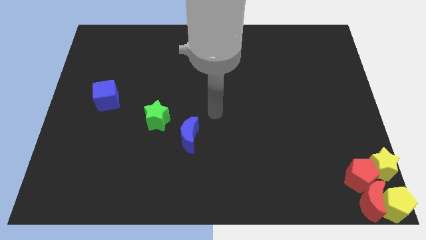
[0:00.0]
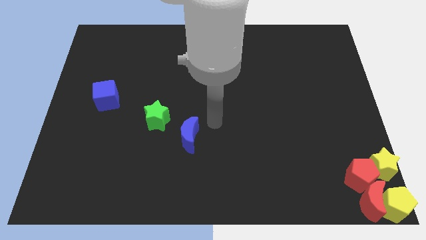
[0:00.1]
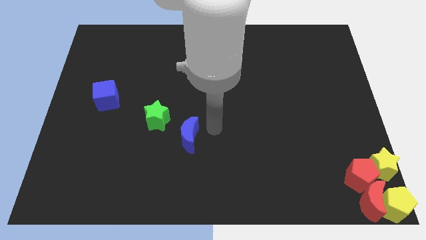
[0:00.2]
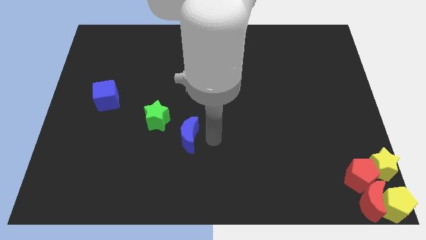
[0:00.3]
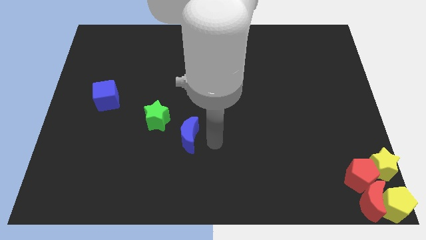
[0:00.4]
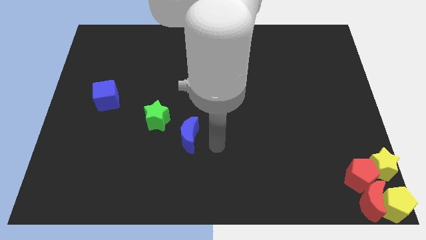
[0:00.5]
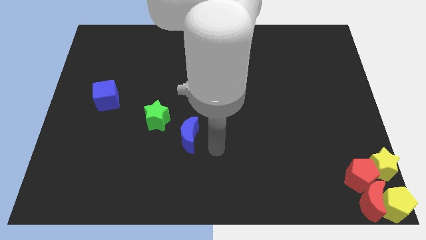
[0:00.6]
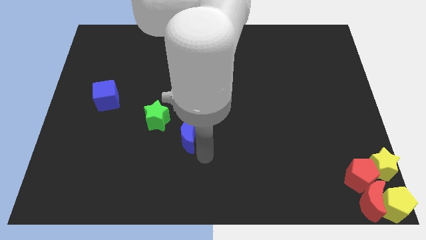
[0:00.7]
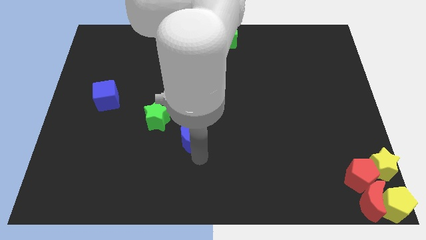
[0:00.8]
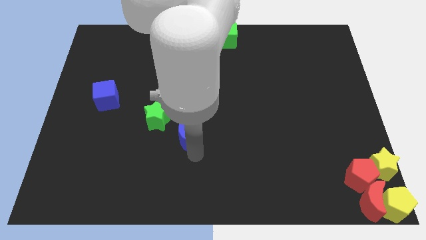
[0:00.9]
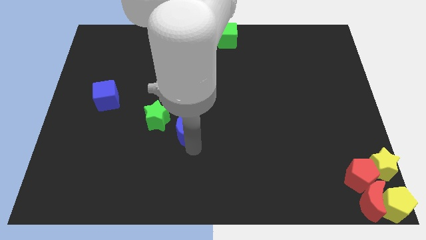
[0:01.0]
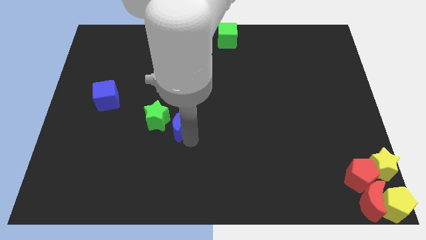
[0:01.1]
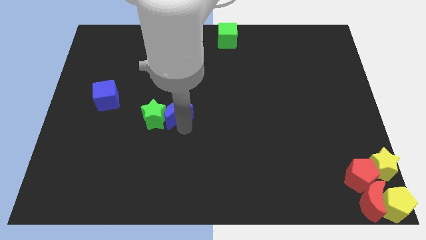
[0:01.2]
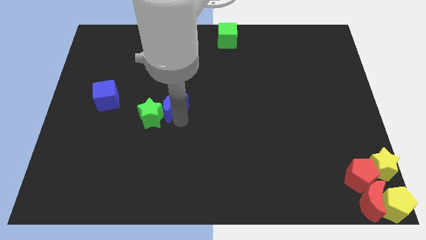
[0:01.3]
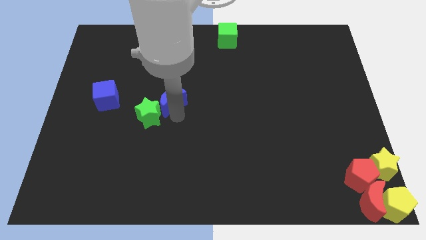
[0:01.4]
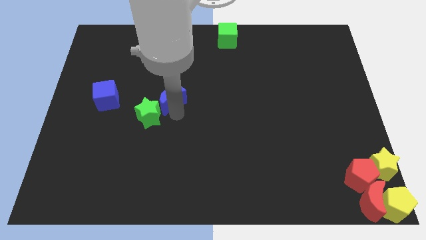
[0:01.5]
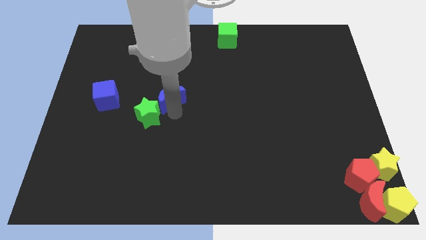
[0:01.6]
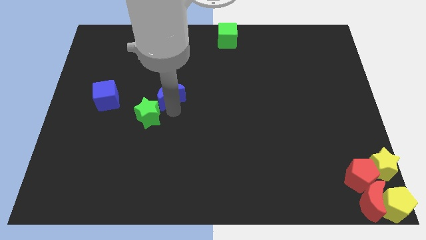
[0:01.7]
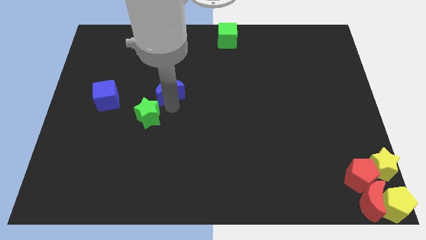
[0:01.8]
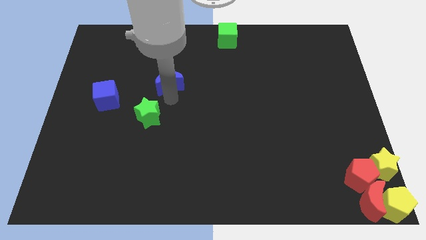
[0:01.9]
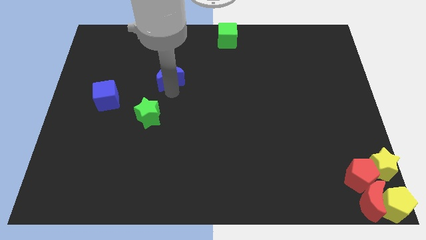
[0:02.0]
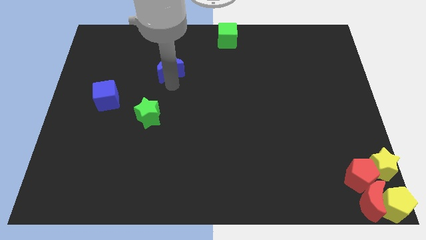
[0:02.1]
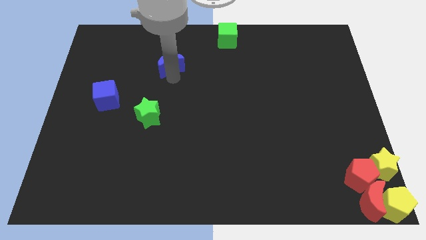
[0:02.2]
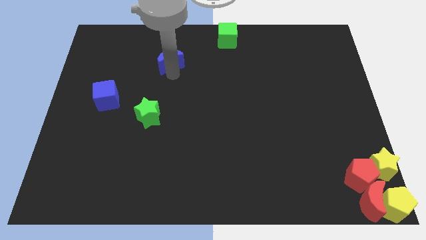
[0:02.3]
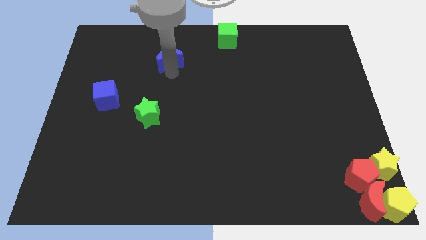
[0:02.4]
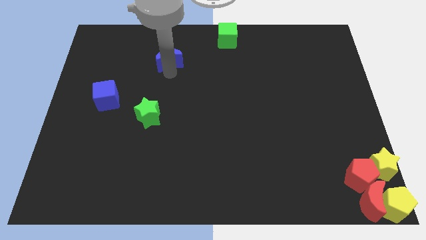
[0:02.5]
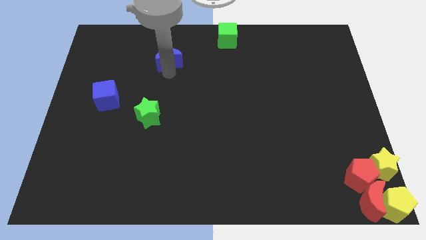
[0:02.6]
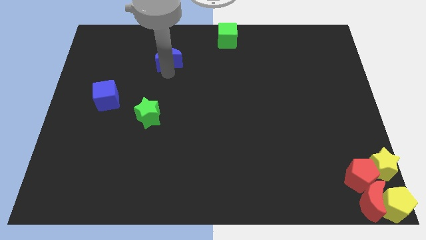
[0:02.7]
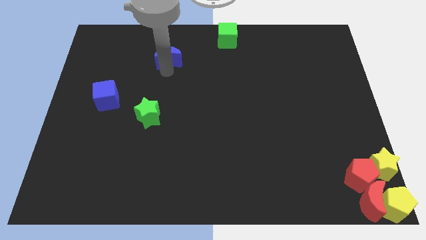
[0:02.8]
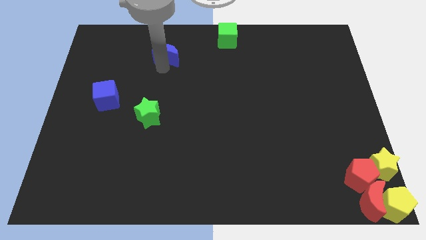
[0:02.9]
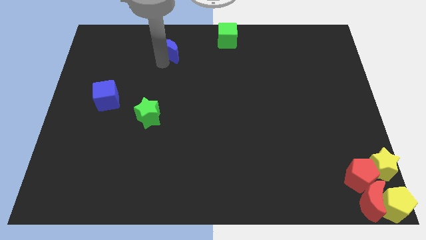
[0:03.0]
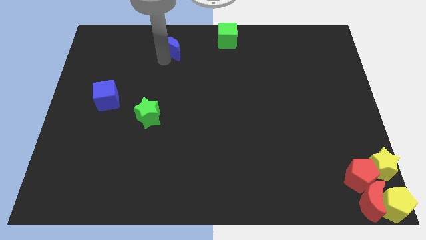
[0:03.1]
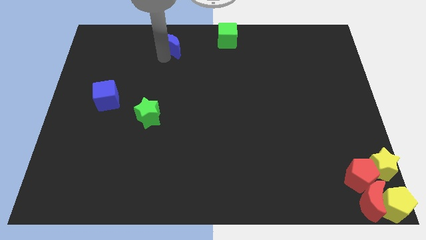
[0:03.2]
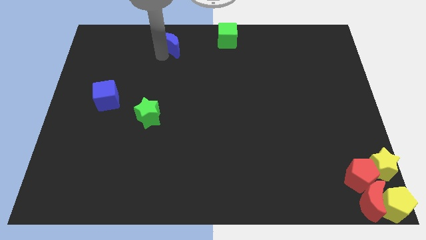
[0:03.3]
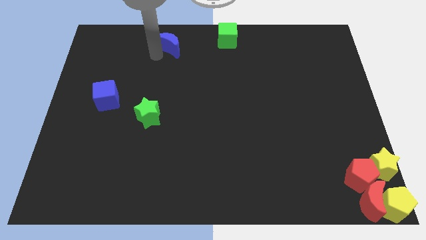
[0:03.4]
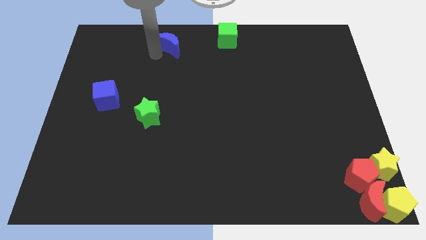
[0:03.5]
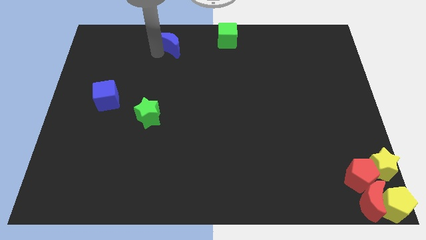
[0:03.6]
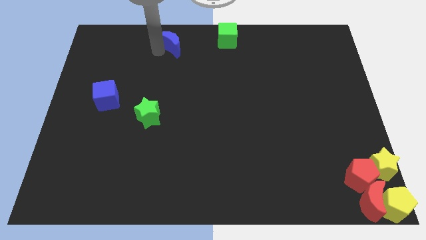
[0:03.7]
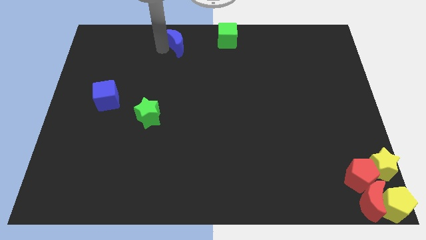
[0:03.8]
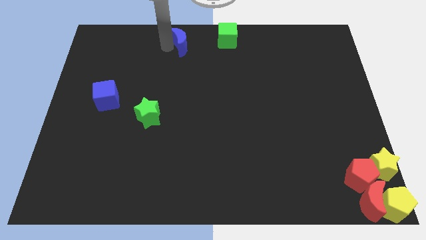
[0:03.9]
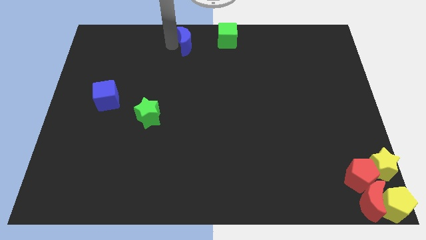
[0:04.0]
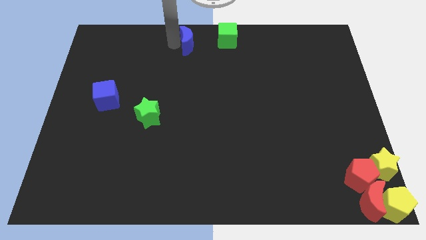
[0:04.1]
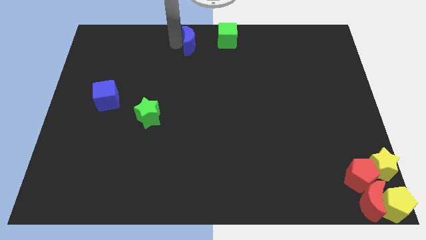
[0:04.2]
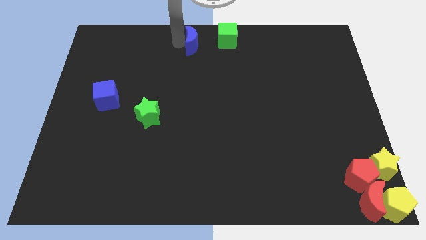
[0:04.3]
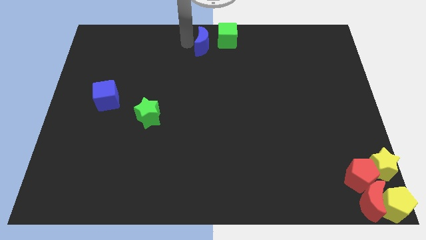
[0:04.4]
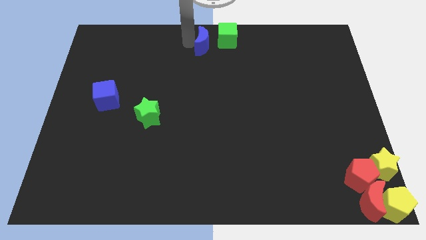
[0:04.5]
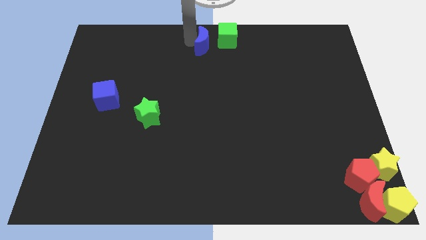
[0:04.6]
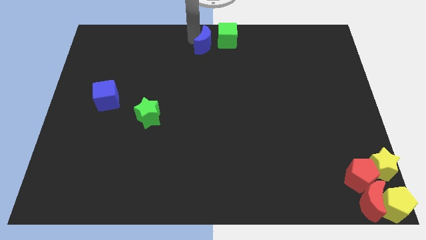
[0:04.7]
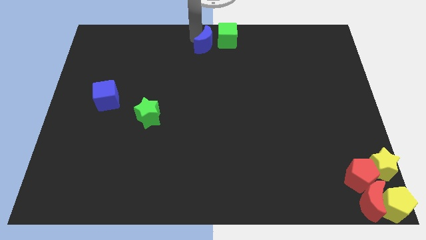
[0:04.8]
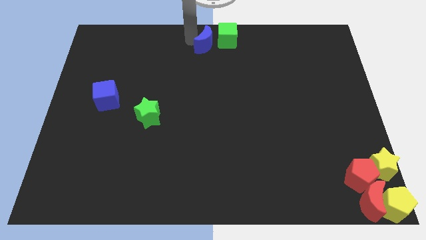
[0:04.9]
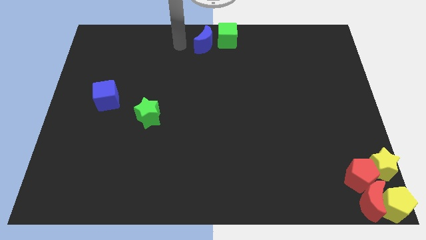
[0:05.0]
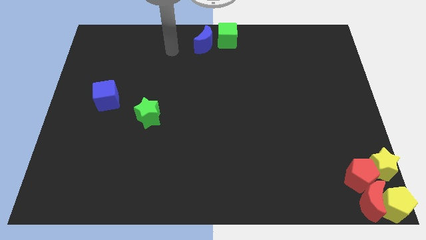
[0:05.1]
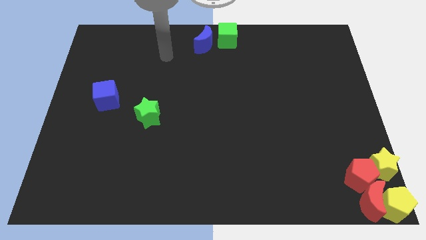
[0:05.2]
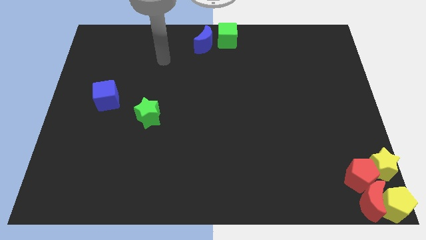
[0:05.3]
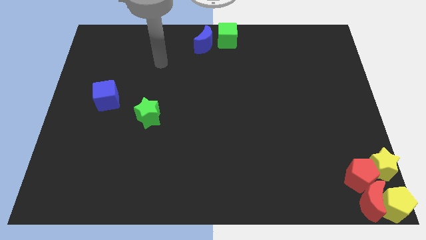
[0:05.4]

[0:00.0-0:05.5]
move the blue crescent to the left of the green cube

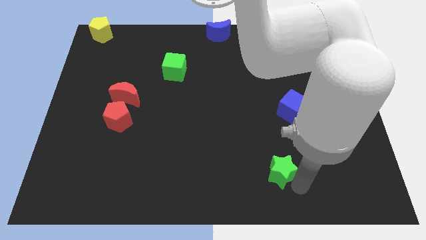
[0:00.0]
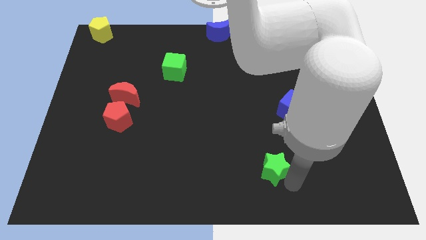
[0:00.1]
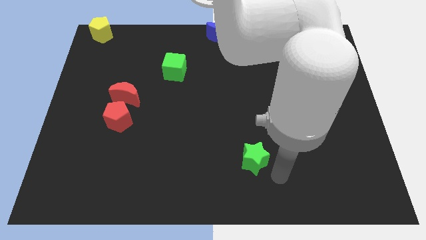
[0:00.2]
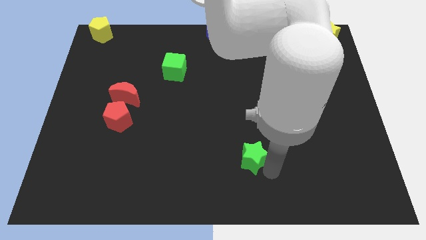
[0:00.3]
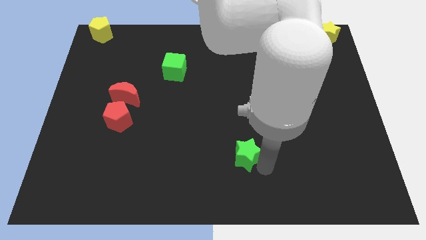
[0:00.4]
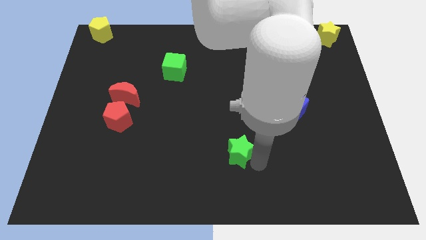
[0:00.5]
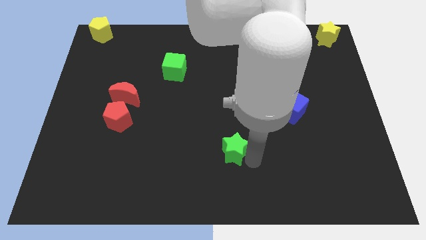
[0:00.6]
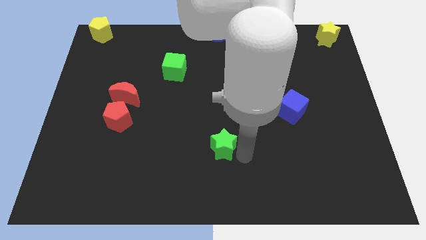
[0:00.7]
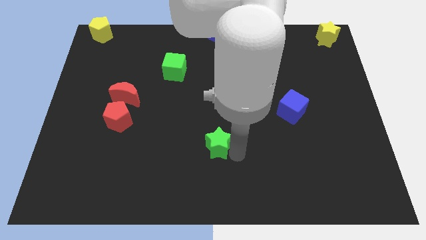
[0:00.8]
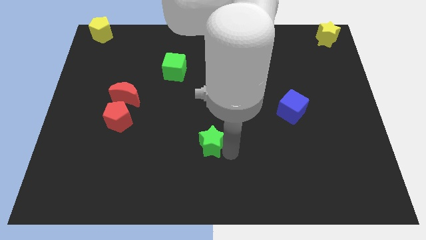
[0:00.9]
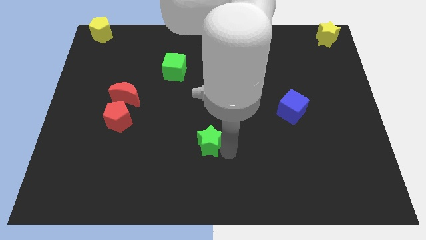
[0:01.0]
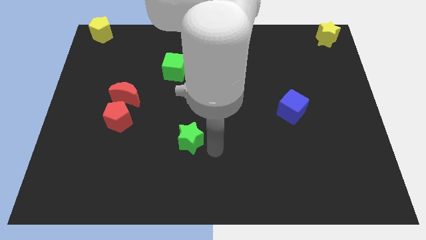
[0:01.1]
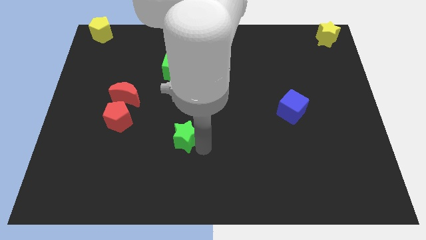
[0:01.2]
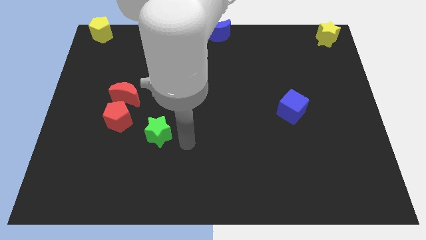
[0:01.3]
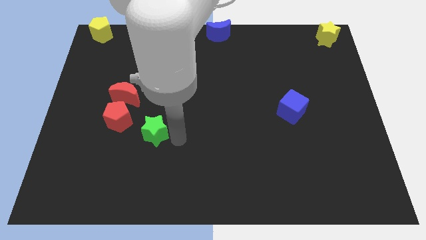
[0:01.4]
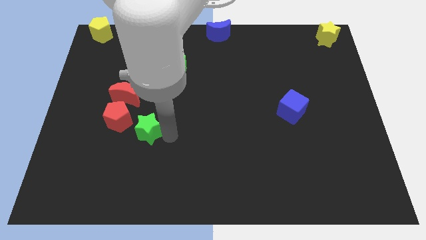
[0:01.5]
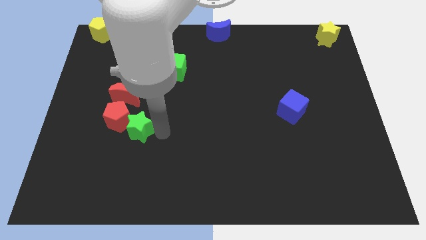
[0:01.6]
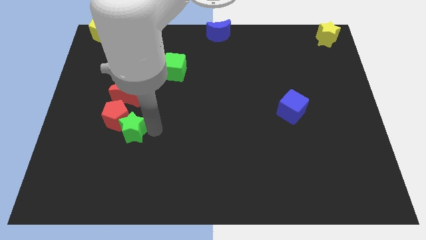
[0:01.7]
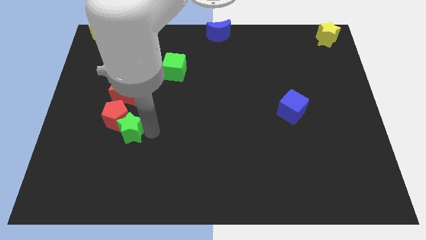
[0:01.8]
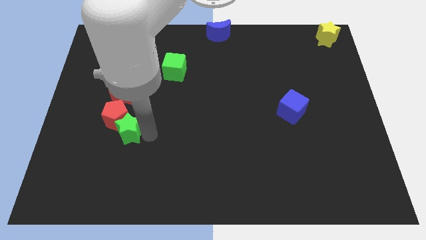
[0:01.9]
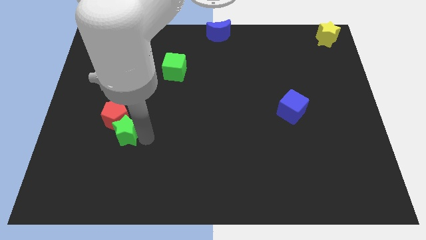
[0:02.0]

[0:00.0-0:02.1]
slide green star into red pentagon

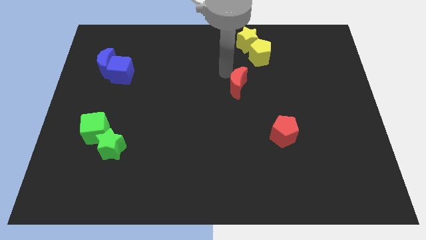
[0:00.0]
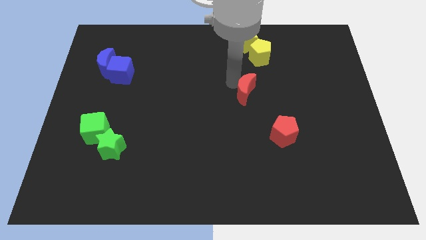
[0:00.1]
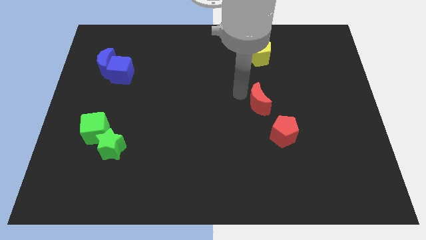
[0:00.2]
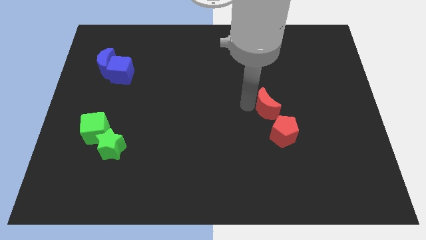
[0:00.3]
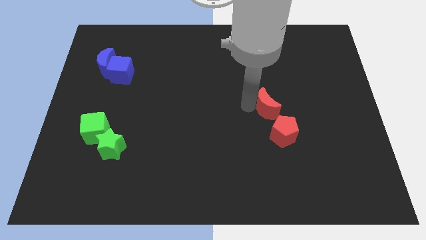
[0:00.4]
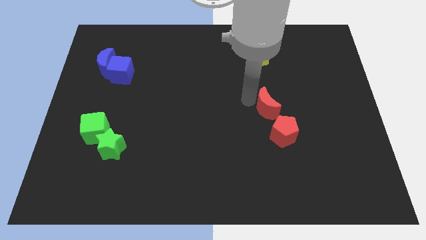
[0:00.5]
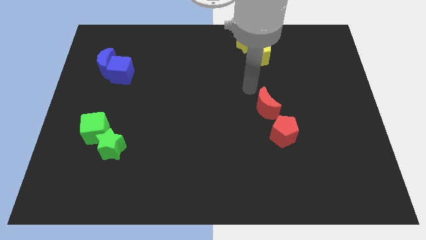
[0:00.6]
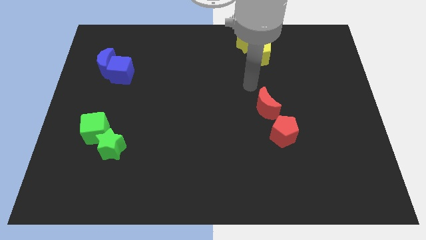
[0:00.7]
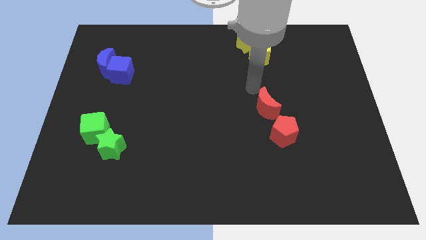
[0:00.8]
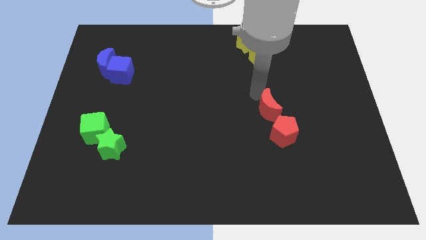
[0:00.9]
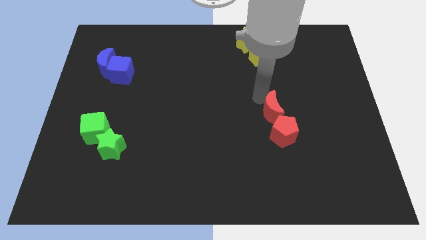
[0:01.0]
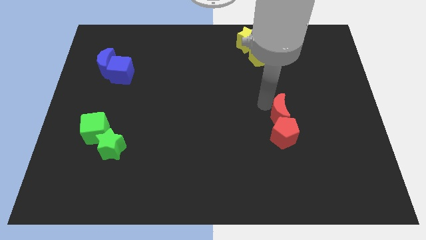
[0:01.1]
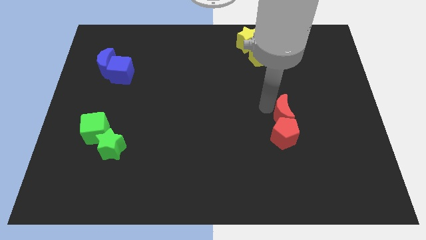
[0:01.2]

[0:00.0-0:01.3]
place the red crescent above the red pentagon

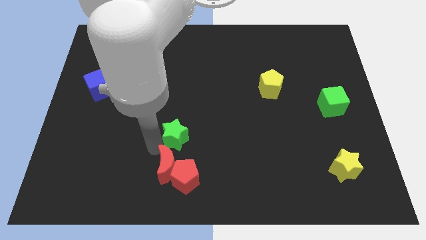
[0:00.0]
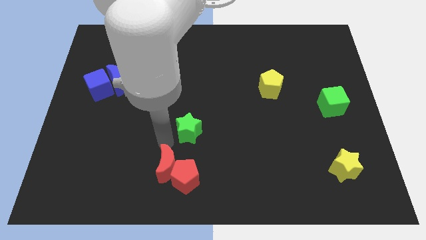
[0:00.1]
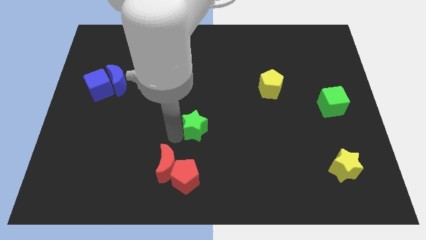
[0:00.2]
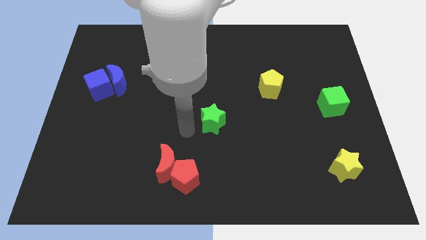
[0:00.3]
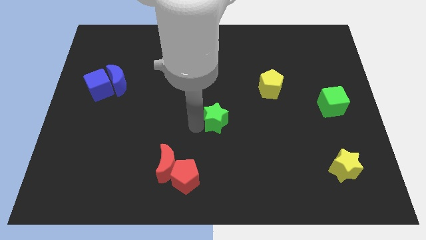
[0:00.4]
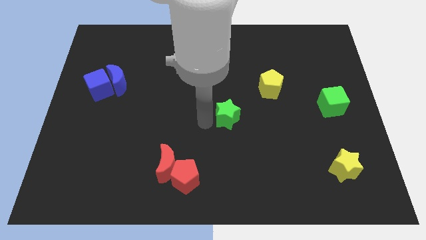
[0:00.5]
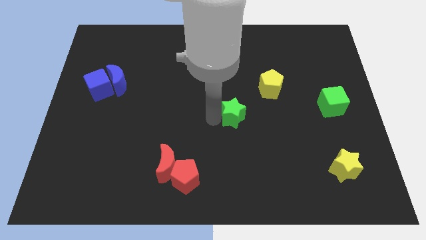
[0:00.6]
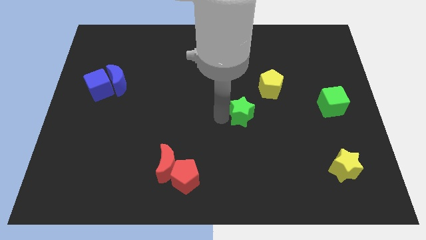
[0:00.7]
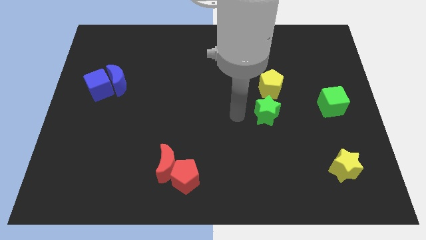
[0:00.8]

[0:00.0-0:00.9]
move the green star to the bottom left side of the yellow block
